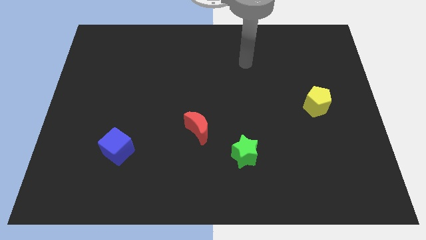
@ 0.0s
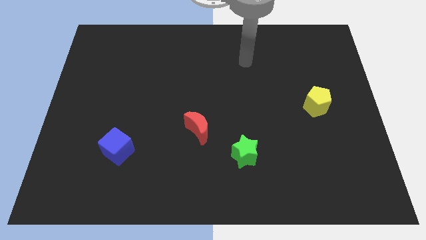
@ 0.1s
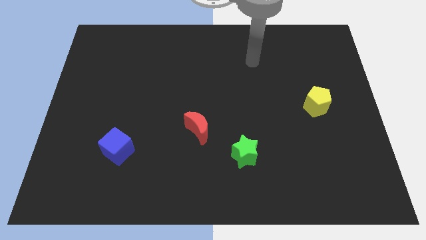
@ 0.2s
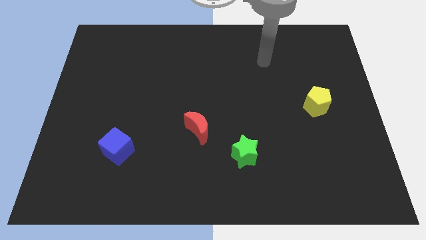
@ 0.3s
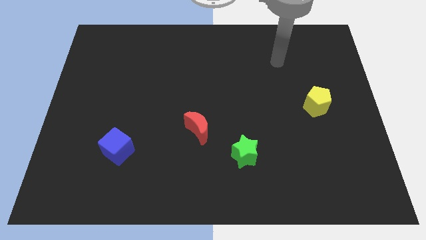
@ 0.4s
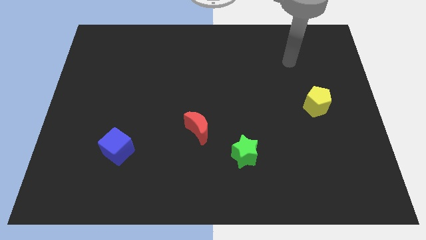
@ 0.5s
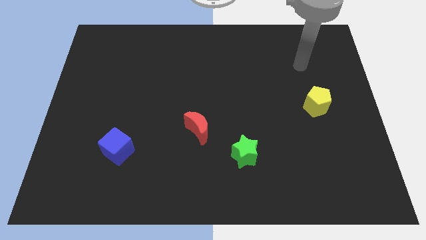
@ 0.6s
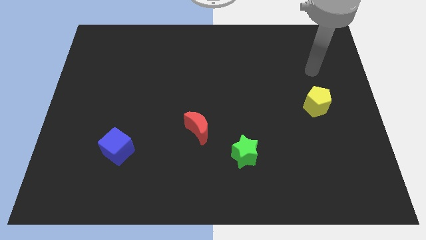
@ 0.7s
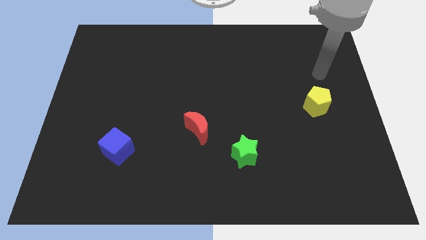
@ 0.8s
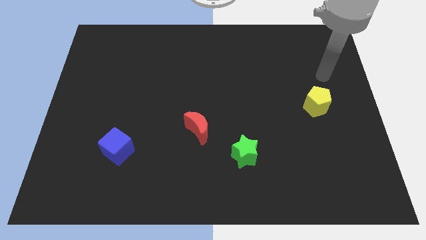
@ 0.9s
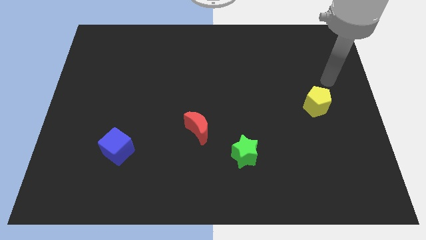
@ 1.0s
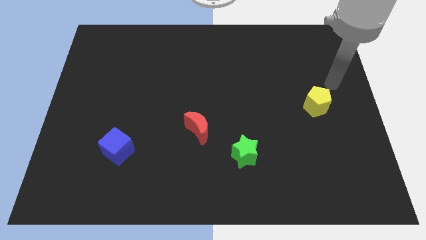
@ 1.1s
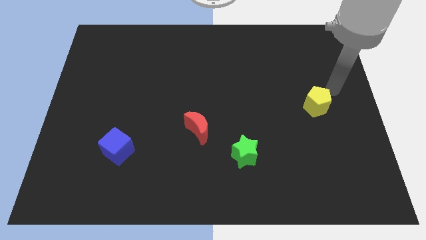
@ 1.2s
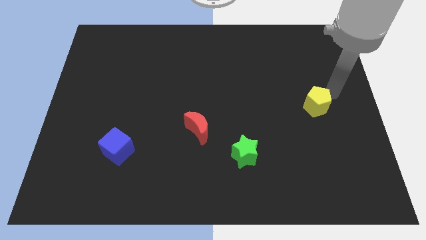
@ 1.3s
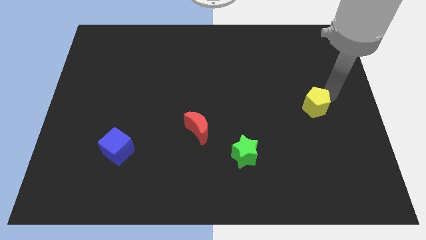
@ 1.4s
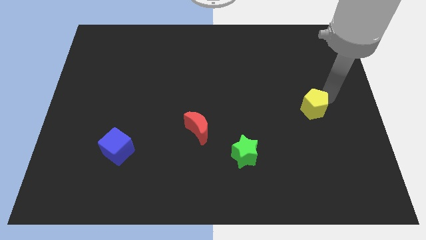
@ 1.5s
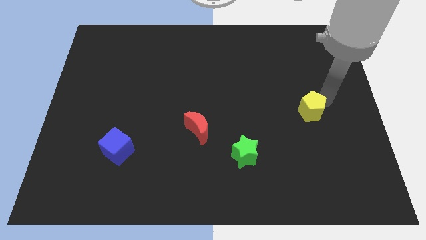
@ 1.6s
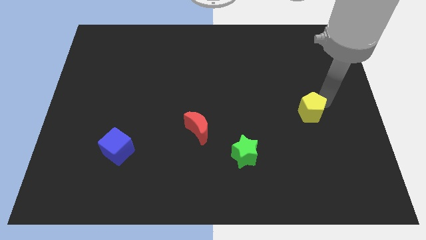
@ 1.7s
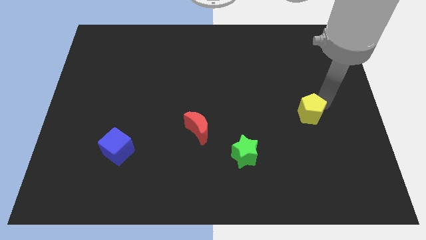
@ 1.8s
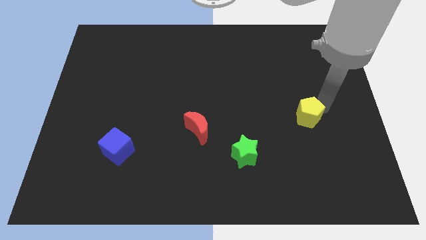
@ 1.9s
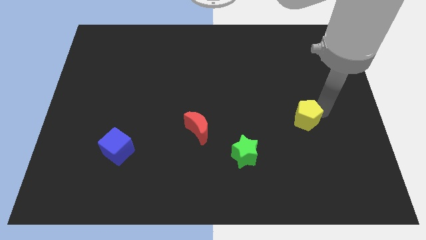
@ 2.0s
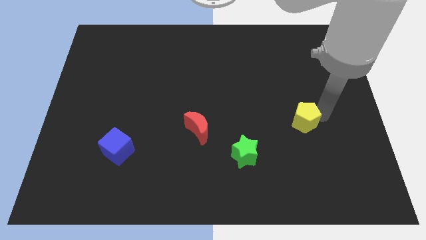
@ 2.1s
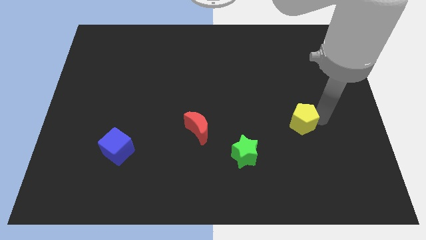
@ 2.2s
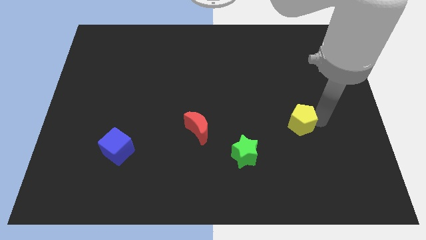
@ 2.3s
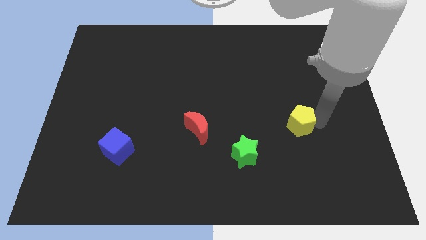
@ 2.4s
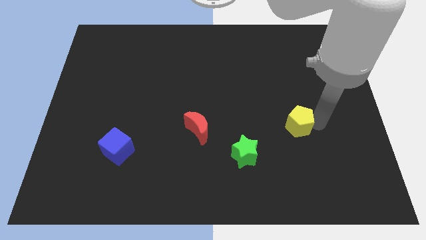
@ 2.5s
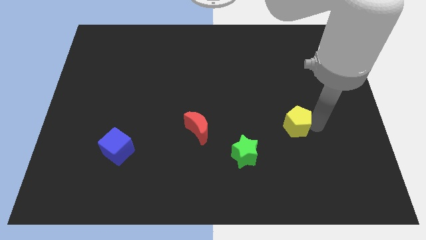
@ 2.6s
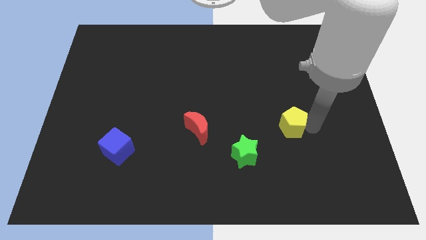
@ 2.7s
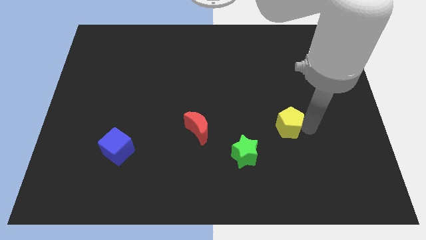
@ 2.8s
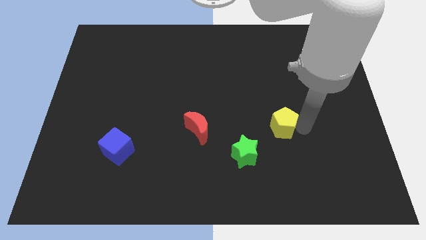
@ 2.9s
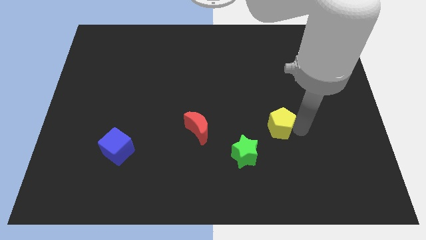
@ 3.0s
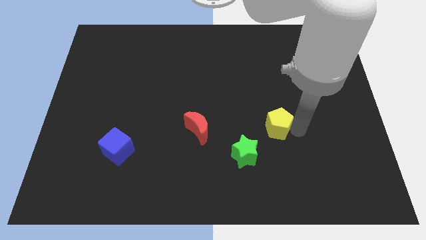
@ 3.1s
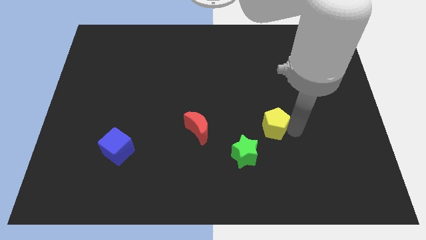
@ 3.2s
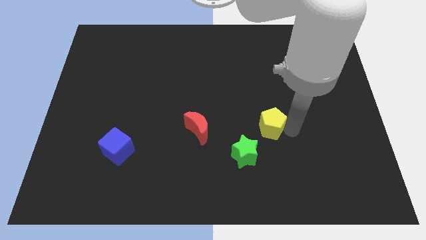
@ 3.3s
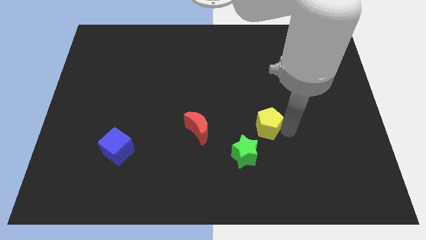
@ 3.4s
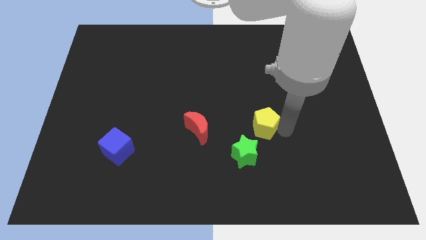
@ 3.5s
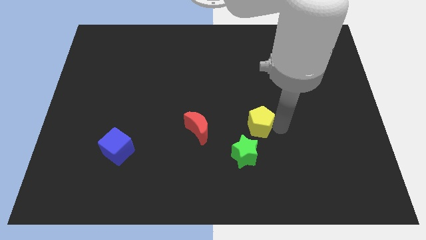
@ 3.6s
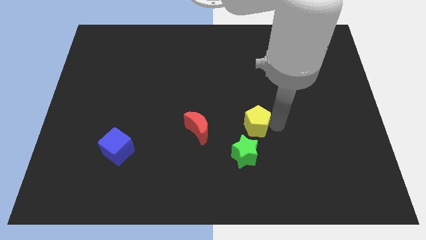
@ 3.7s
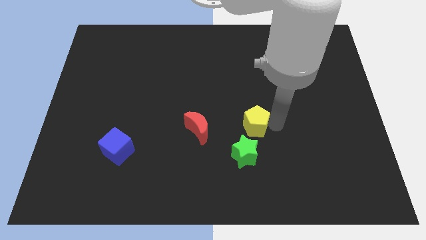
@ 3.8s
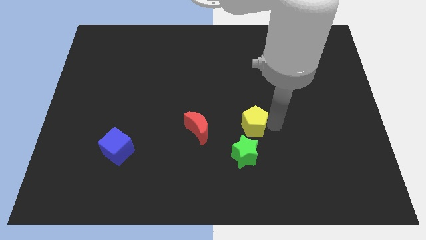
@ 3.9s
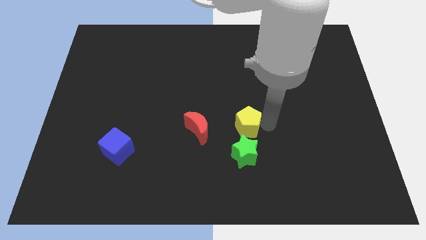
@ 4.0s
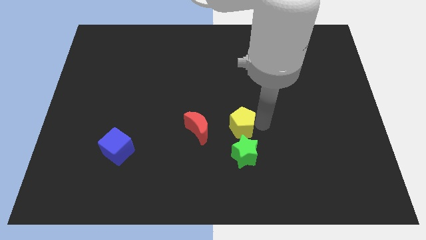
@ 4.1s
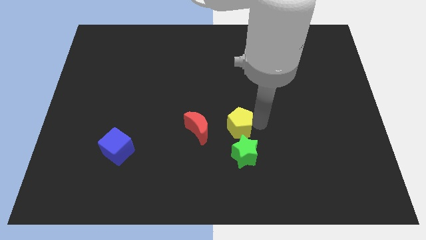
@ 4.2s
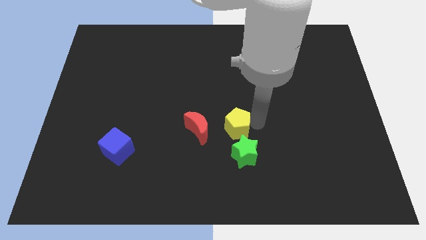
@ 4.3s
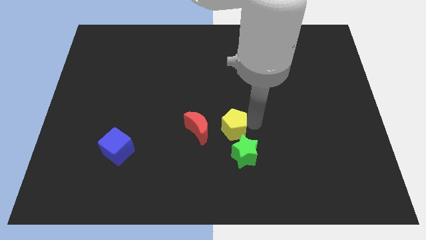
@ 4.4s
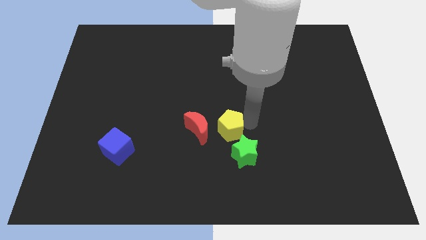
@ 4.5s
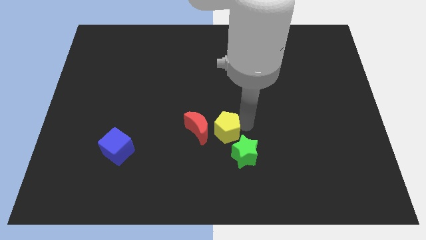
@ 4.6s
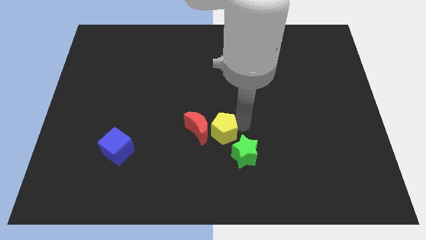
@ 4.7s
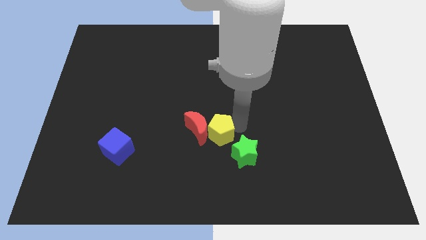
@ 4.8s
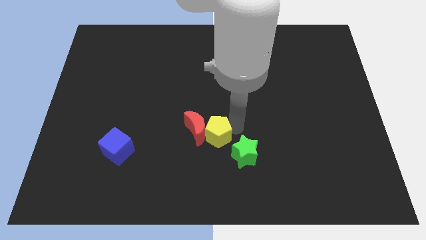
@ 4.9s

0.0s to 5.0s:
slide the yellow pentagon next to the red moon

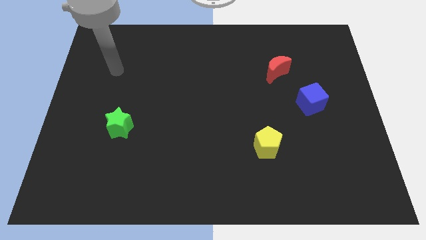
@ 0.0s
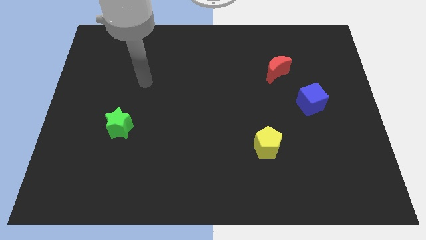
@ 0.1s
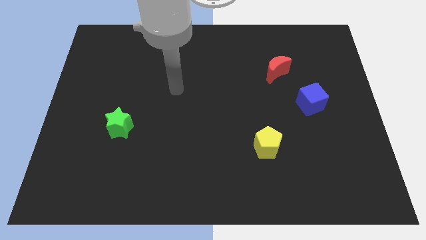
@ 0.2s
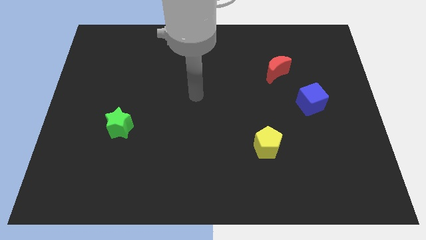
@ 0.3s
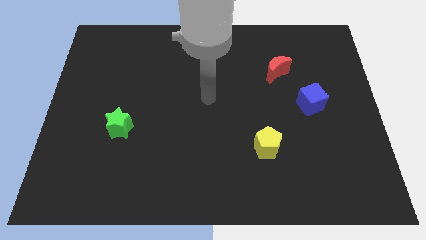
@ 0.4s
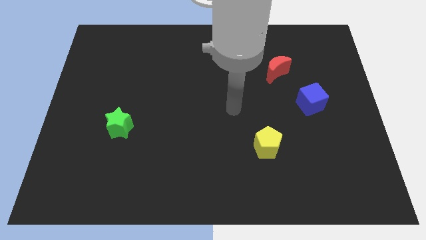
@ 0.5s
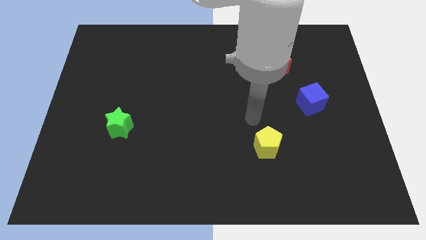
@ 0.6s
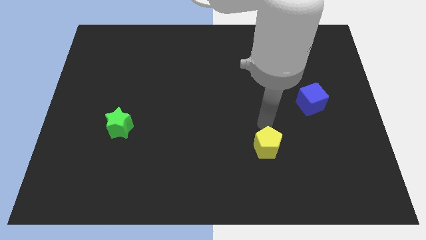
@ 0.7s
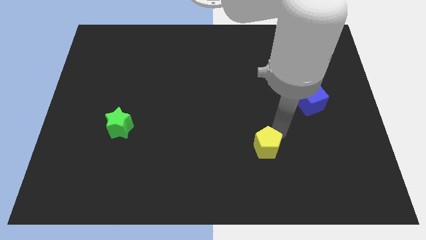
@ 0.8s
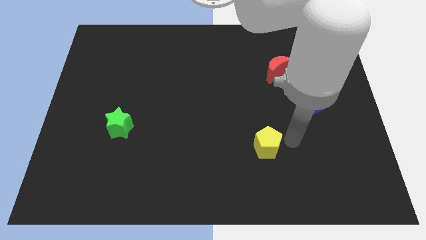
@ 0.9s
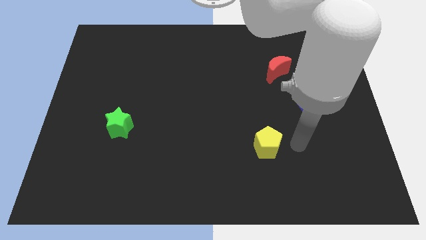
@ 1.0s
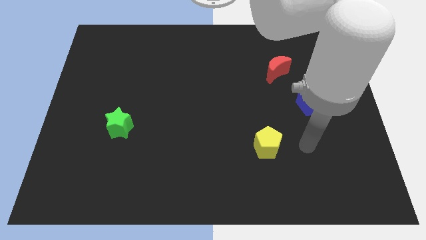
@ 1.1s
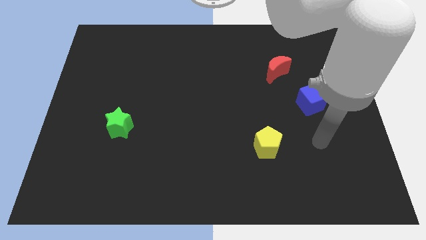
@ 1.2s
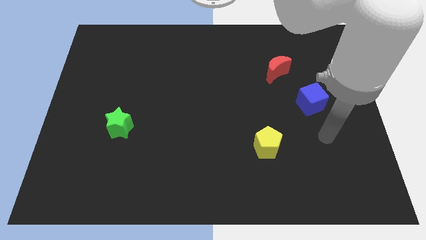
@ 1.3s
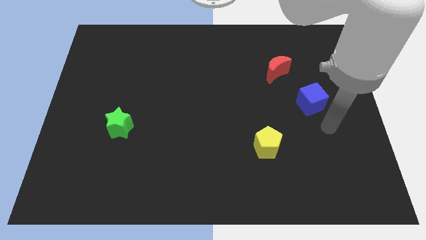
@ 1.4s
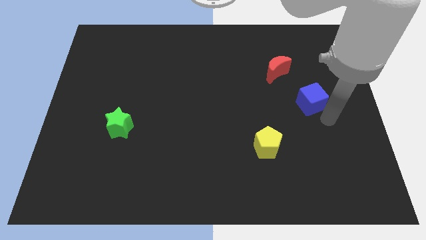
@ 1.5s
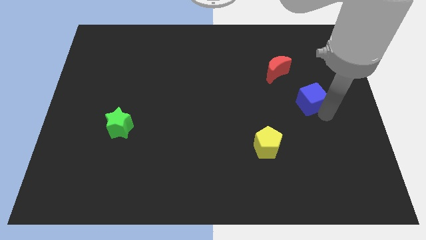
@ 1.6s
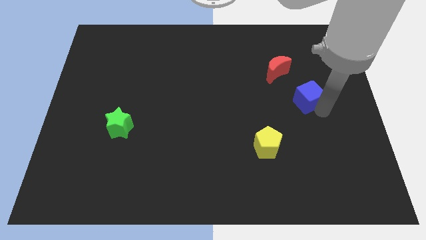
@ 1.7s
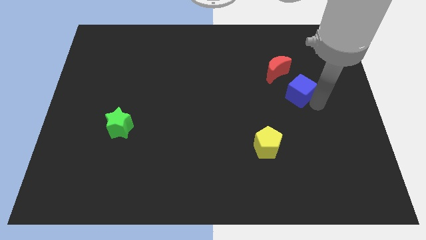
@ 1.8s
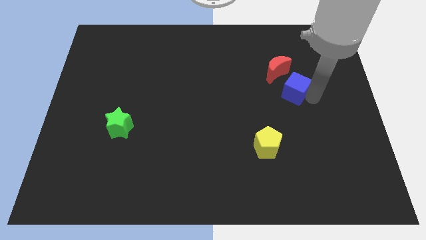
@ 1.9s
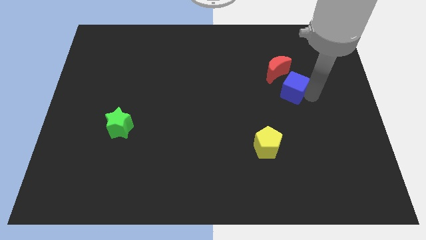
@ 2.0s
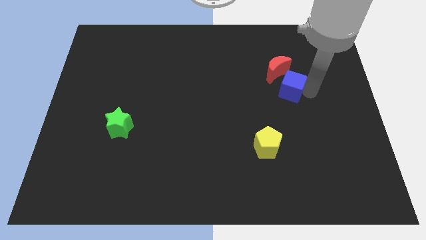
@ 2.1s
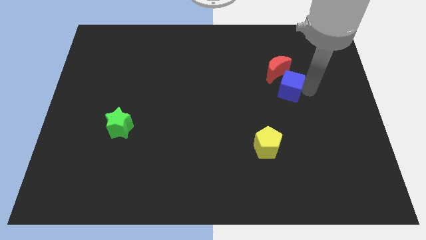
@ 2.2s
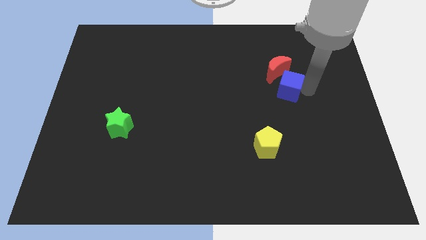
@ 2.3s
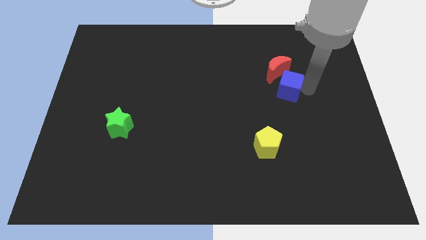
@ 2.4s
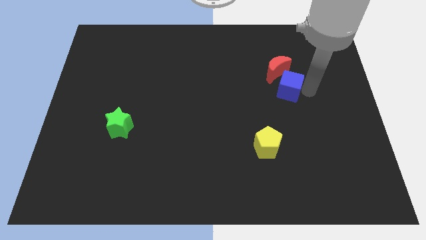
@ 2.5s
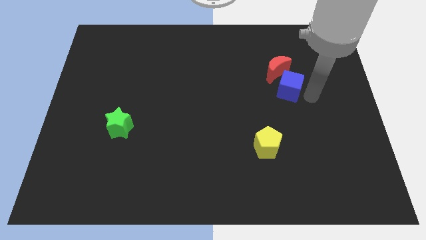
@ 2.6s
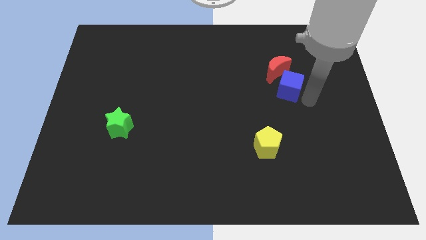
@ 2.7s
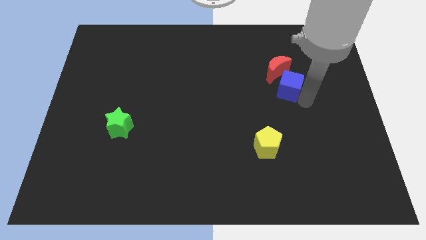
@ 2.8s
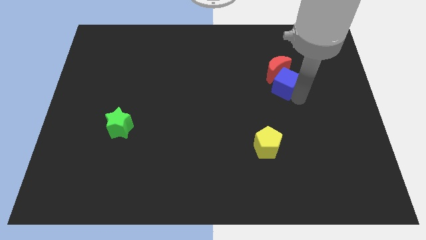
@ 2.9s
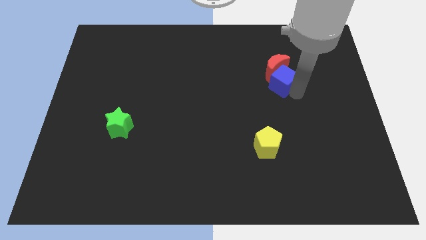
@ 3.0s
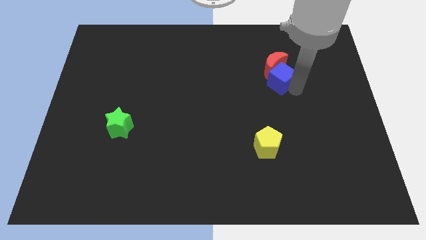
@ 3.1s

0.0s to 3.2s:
move the cube towards the red moon

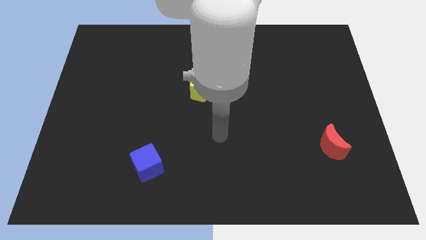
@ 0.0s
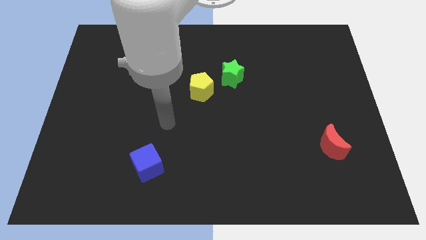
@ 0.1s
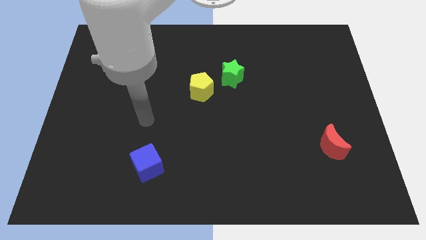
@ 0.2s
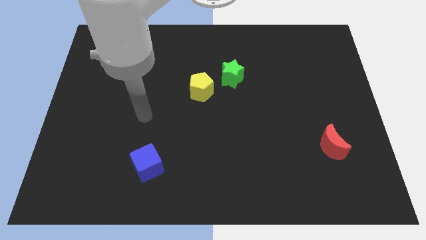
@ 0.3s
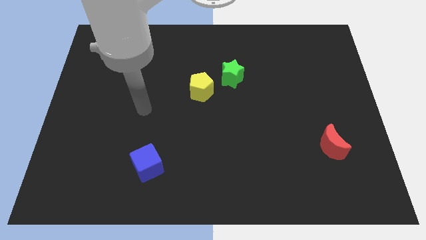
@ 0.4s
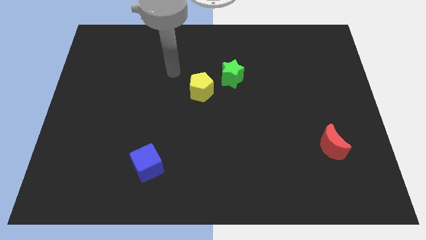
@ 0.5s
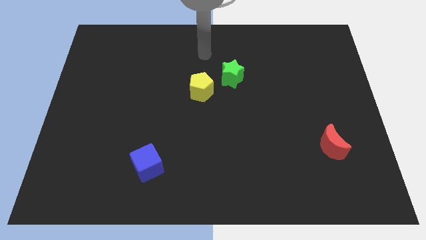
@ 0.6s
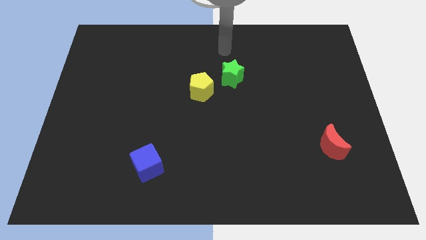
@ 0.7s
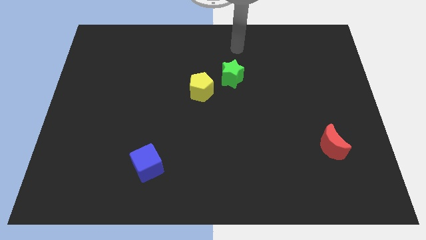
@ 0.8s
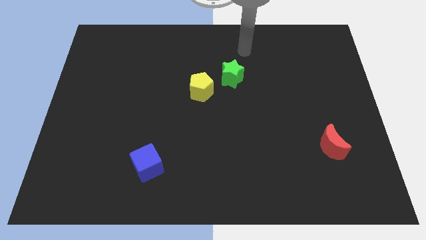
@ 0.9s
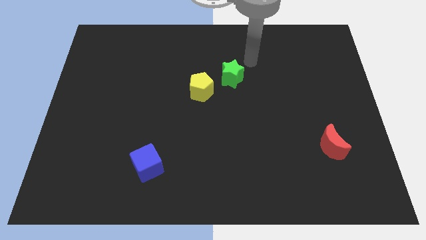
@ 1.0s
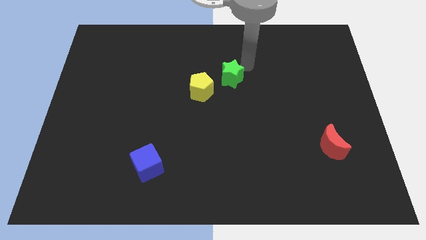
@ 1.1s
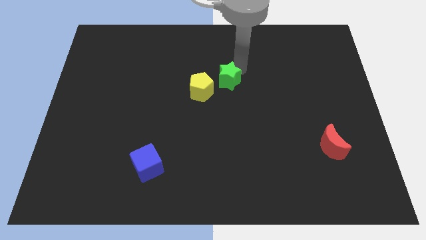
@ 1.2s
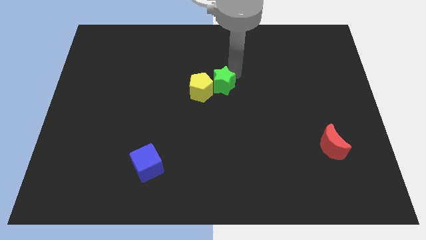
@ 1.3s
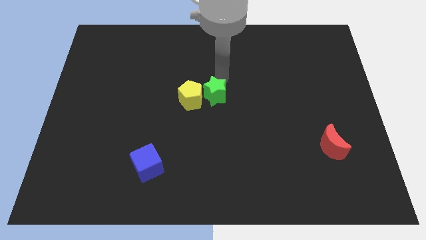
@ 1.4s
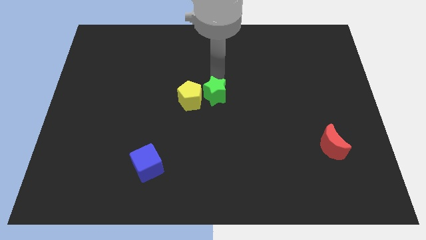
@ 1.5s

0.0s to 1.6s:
slide the star next to the pentagon
